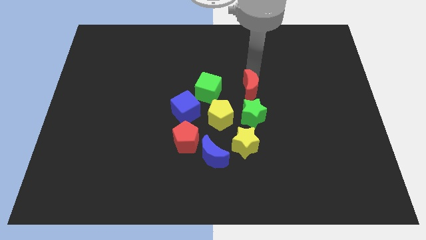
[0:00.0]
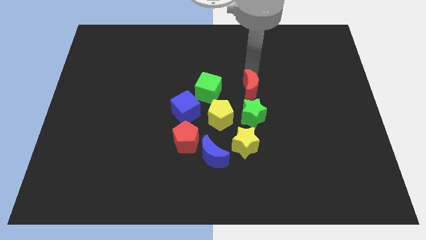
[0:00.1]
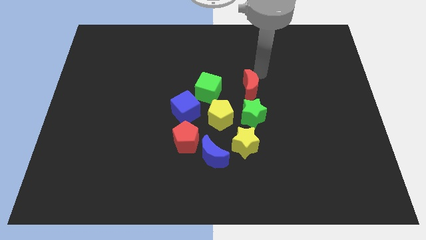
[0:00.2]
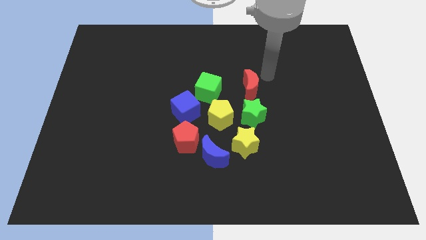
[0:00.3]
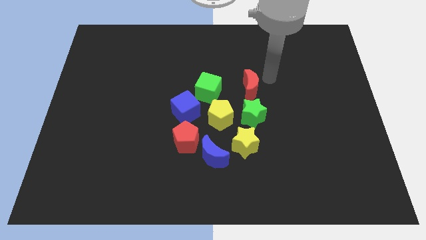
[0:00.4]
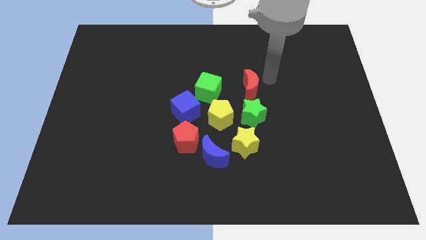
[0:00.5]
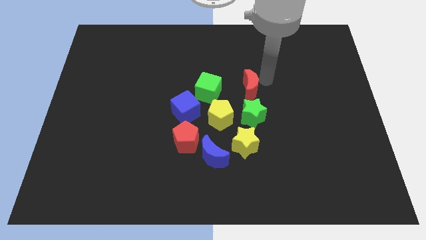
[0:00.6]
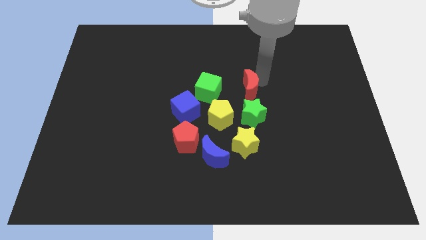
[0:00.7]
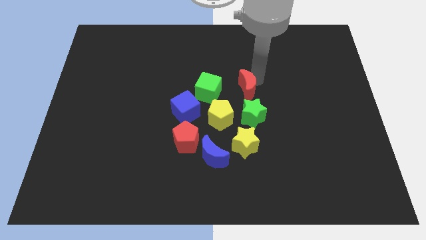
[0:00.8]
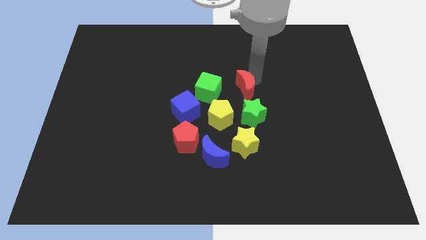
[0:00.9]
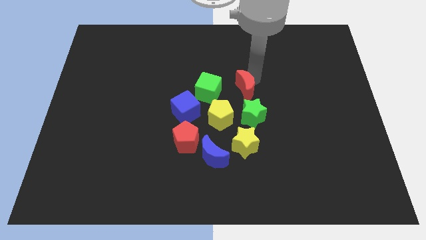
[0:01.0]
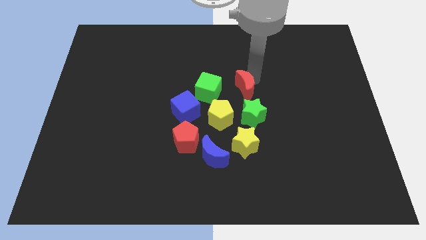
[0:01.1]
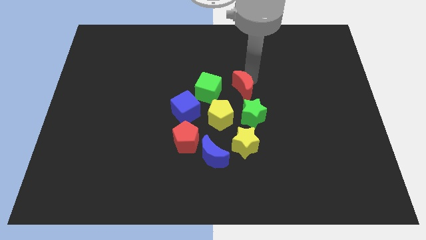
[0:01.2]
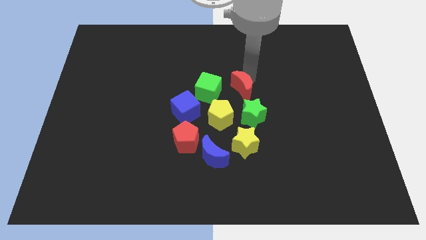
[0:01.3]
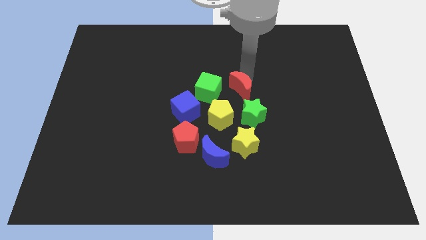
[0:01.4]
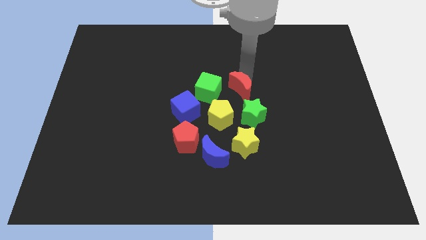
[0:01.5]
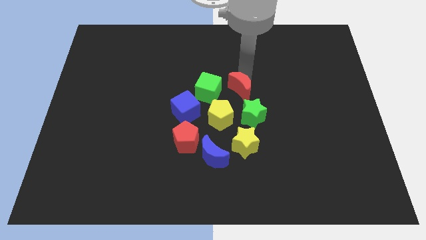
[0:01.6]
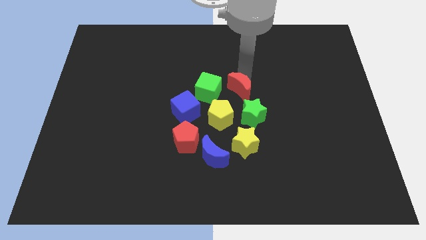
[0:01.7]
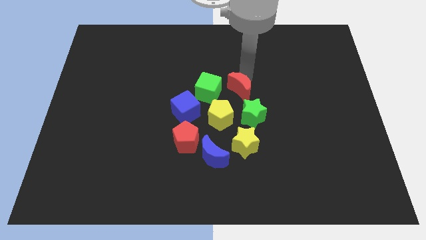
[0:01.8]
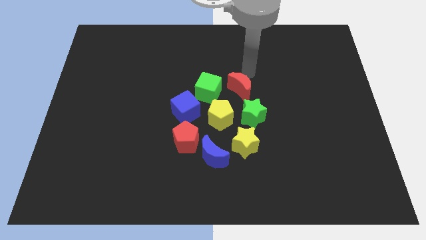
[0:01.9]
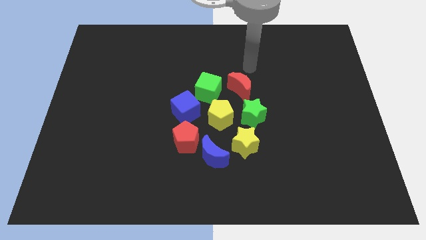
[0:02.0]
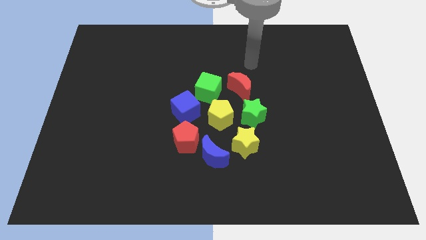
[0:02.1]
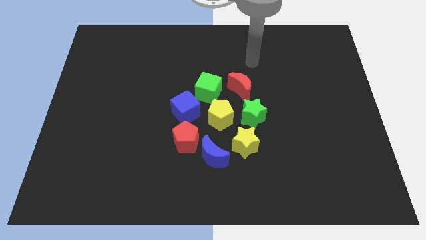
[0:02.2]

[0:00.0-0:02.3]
adjust the red moon in between the green blocks

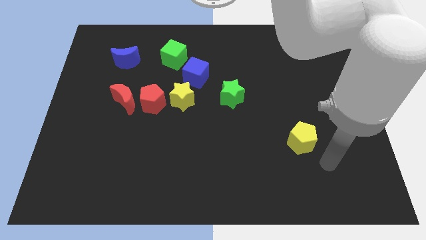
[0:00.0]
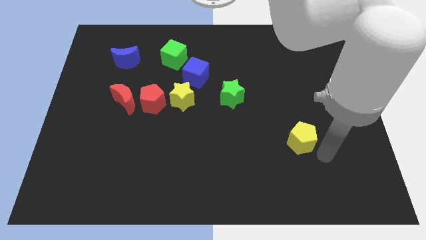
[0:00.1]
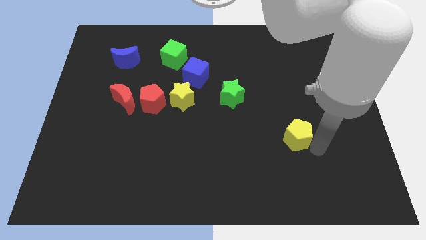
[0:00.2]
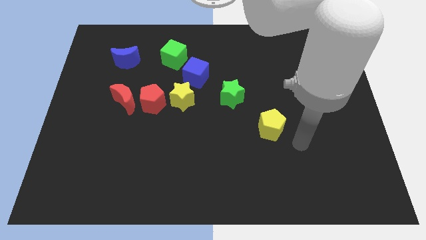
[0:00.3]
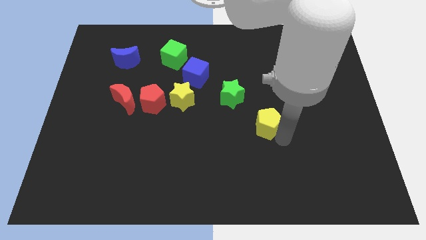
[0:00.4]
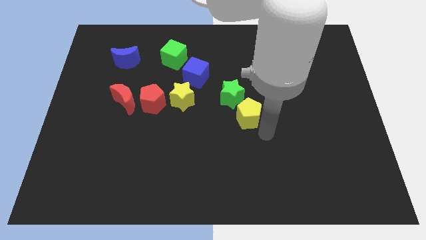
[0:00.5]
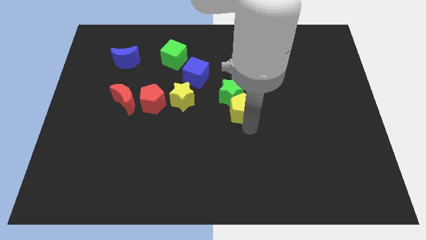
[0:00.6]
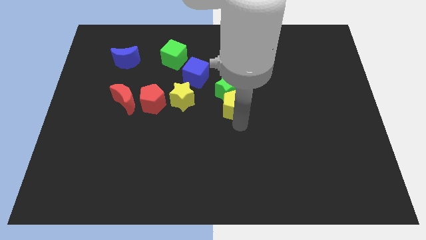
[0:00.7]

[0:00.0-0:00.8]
place yellow pentagon to the bottom of green star

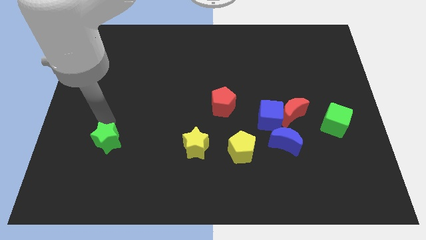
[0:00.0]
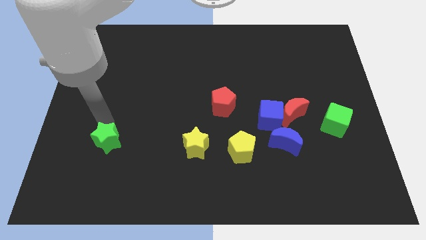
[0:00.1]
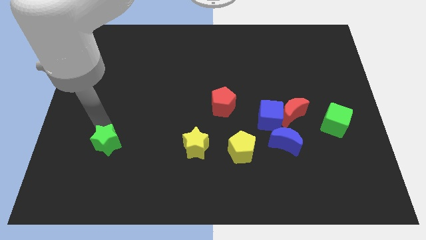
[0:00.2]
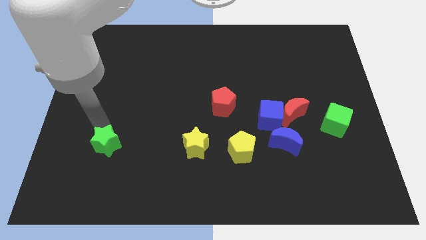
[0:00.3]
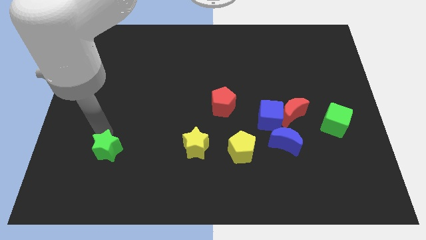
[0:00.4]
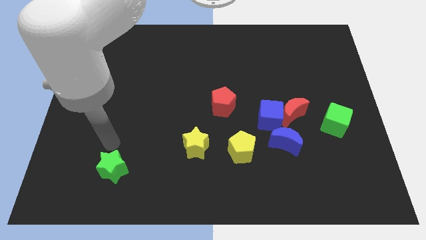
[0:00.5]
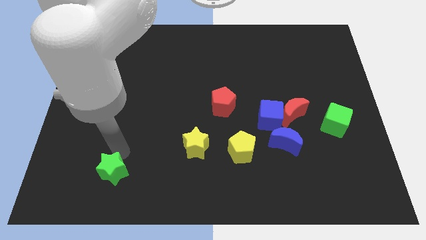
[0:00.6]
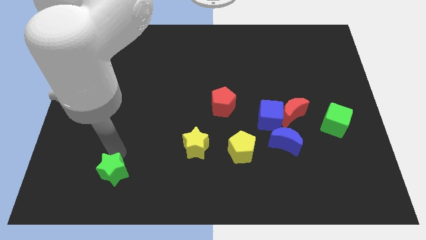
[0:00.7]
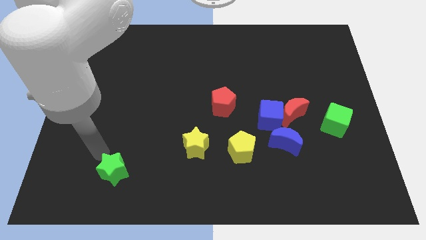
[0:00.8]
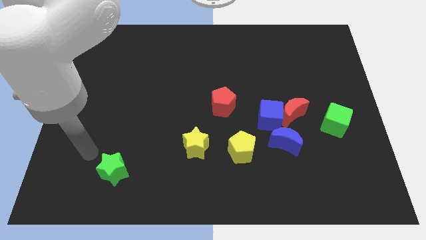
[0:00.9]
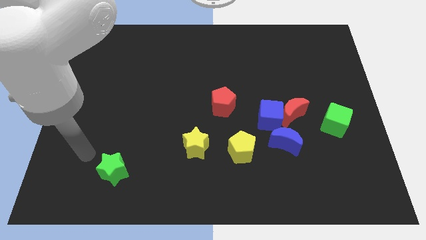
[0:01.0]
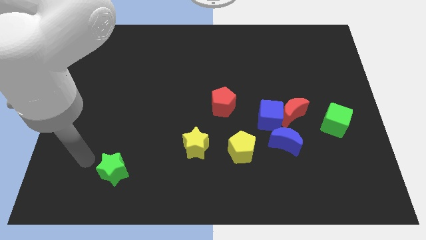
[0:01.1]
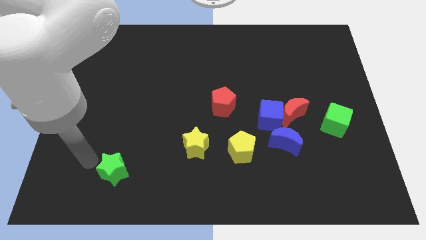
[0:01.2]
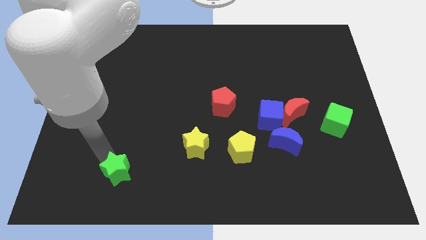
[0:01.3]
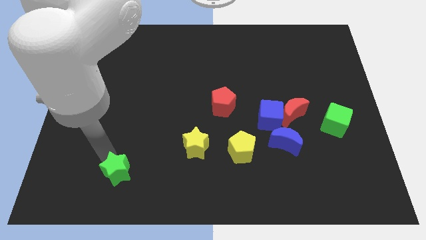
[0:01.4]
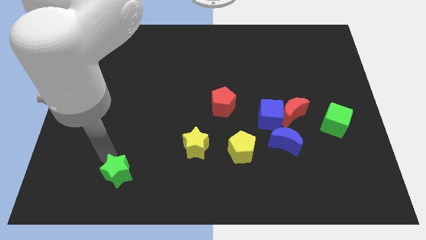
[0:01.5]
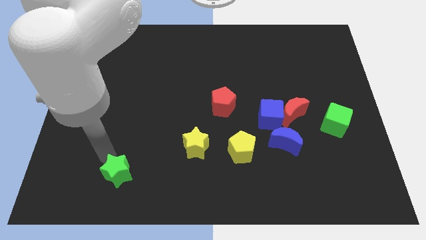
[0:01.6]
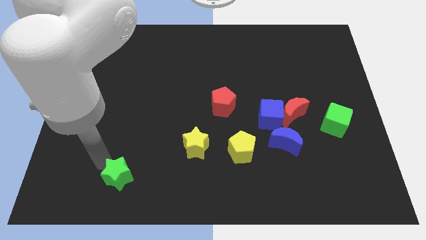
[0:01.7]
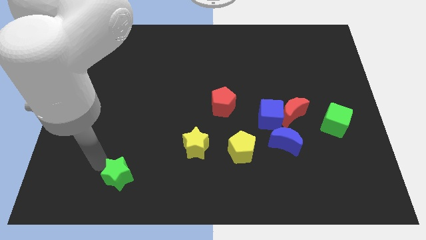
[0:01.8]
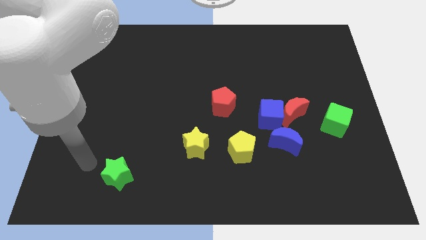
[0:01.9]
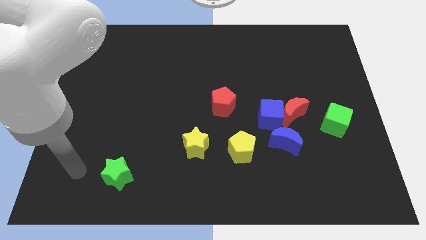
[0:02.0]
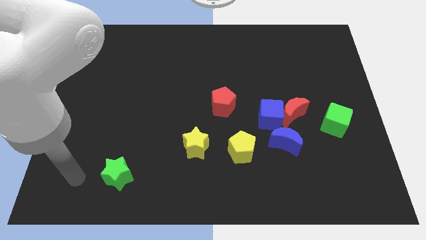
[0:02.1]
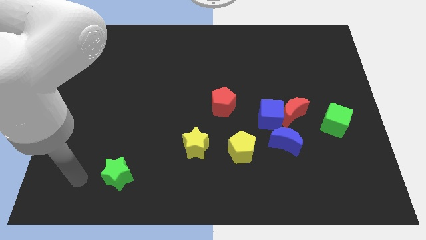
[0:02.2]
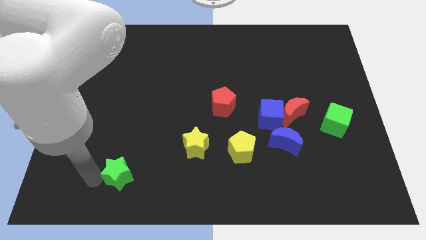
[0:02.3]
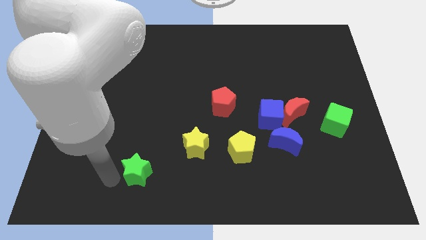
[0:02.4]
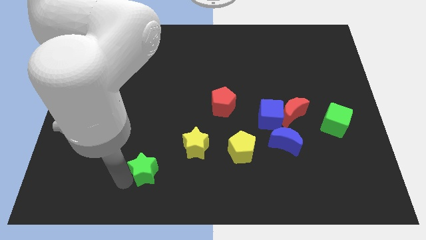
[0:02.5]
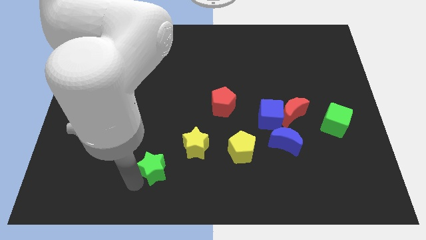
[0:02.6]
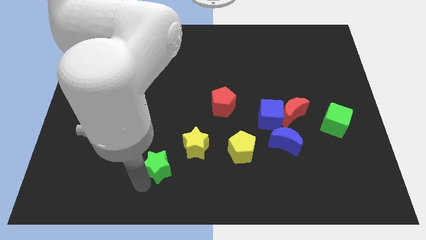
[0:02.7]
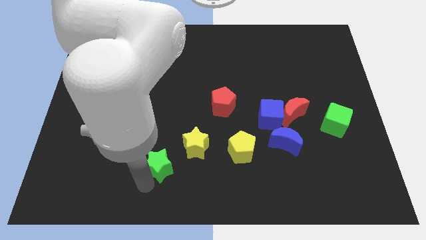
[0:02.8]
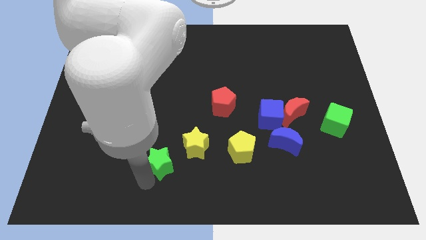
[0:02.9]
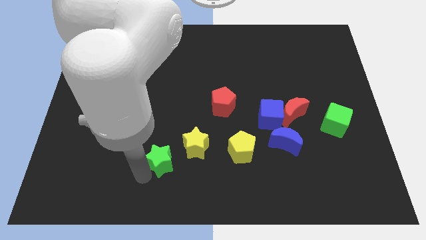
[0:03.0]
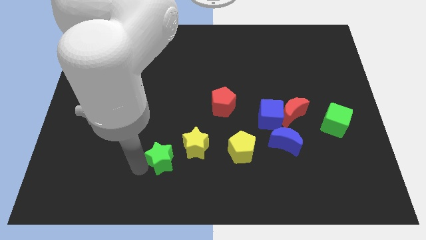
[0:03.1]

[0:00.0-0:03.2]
place the green star diagonally bottom left to the yellow star

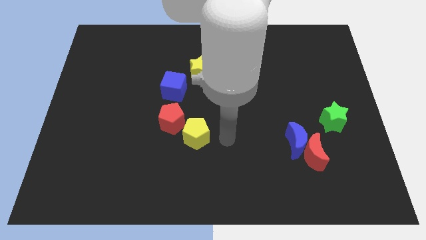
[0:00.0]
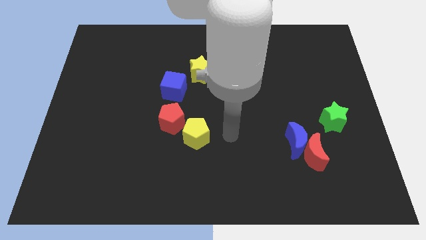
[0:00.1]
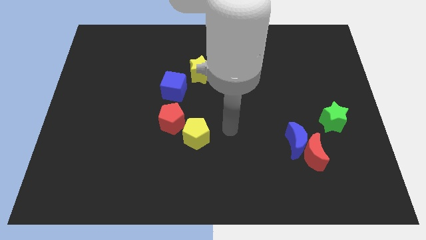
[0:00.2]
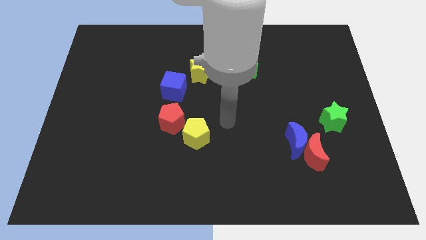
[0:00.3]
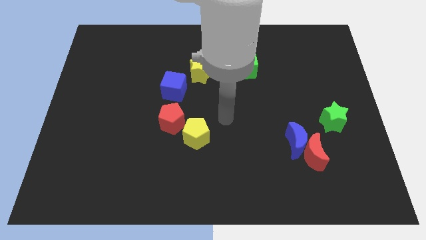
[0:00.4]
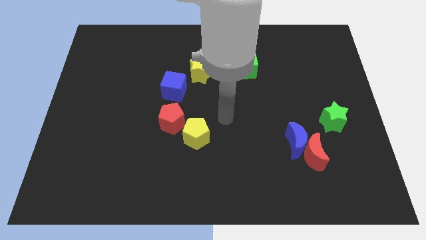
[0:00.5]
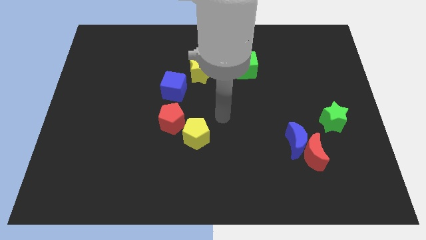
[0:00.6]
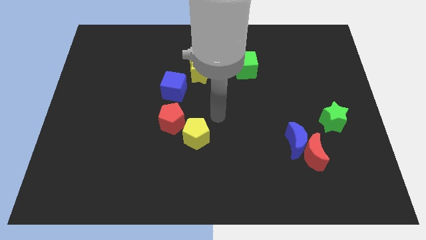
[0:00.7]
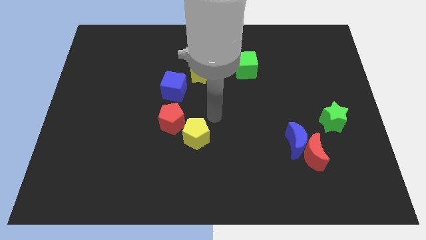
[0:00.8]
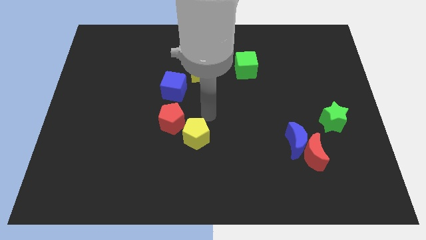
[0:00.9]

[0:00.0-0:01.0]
place your hand above the yellow pentagon

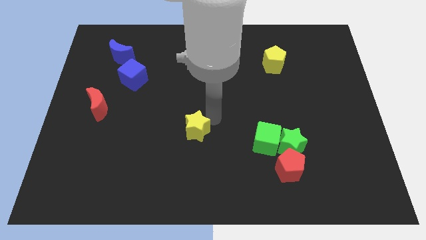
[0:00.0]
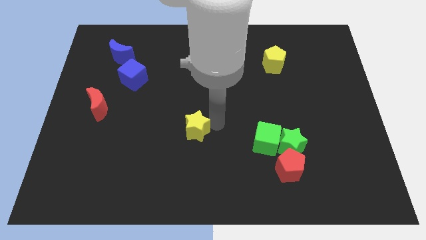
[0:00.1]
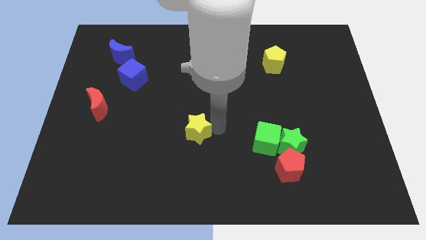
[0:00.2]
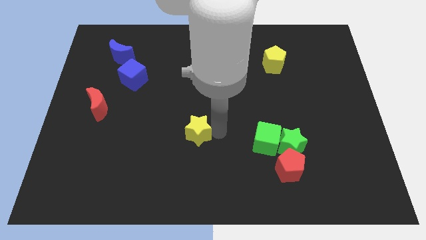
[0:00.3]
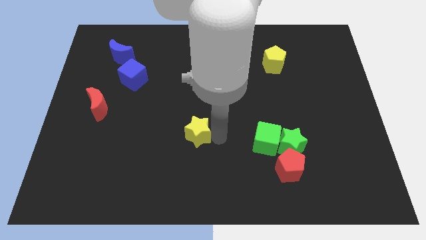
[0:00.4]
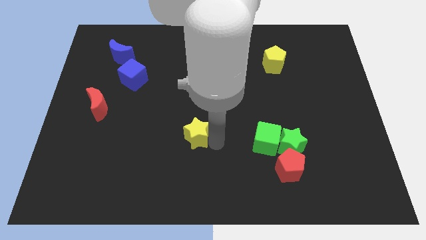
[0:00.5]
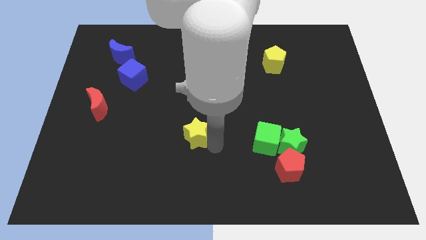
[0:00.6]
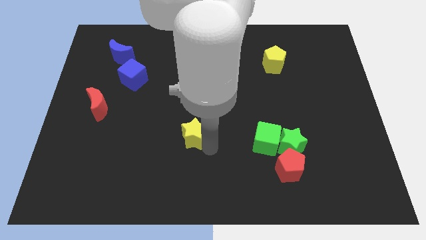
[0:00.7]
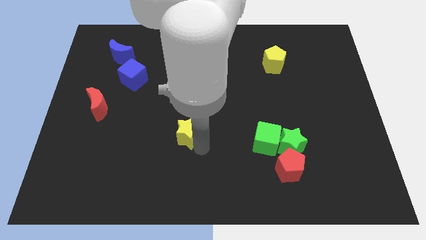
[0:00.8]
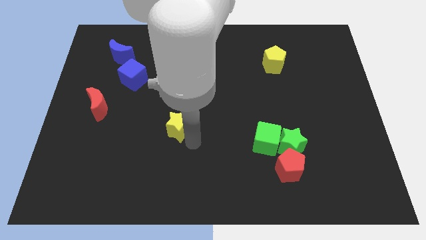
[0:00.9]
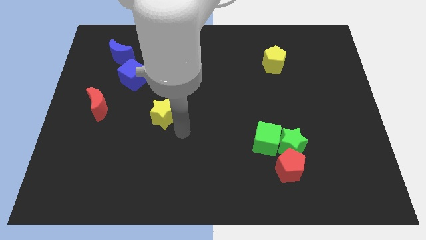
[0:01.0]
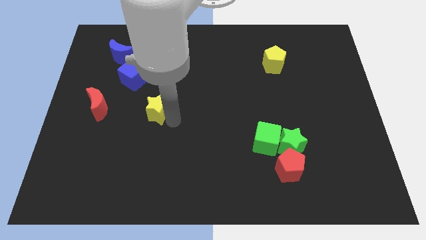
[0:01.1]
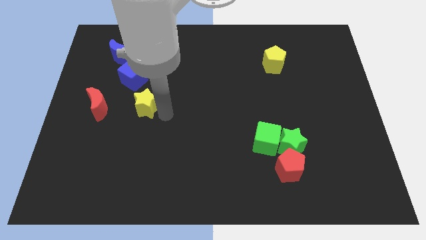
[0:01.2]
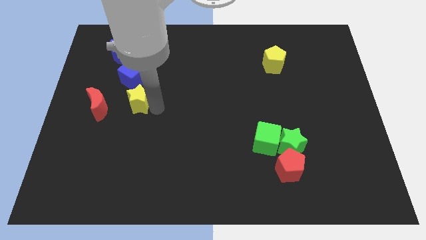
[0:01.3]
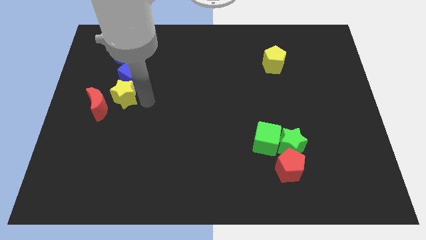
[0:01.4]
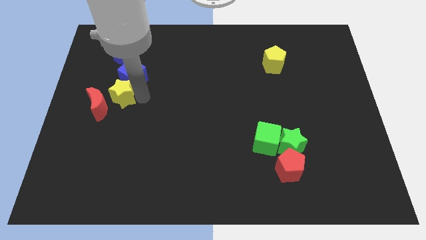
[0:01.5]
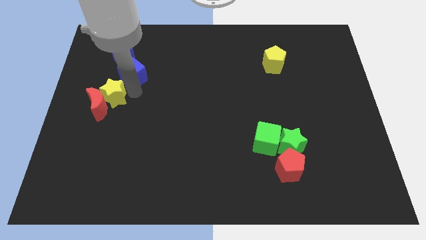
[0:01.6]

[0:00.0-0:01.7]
move yellow star into the red moon

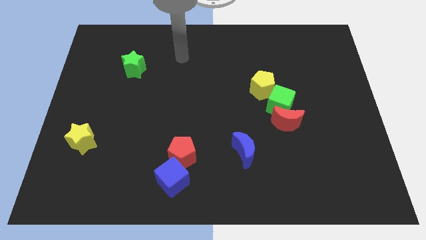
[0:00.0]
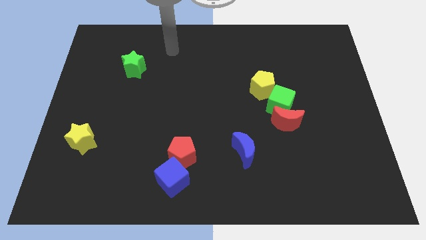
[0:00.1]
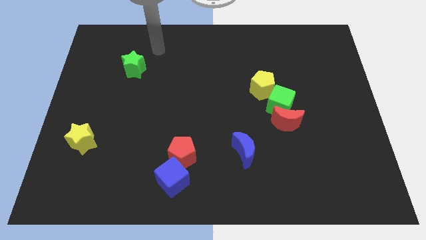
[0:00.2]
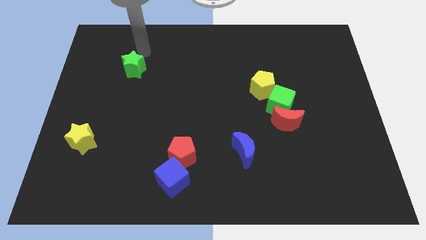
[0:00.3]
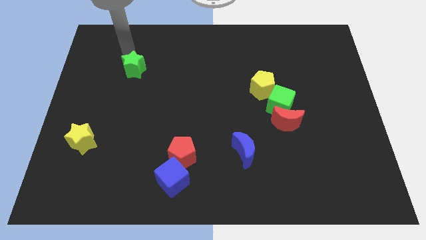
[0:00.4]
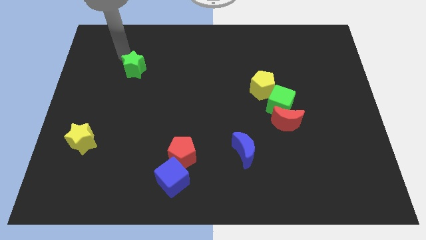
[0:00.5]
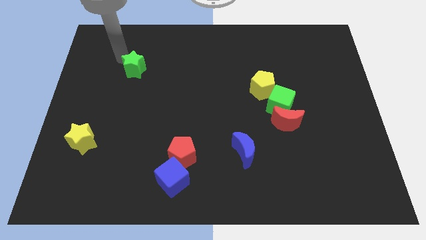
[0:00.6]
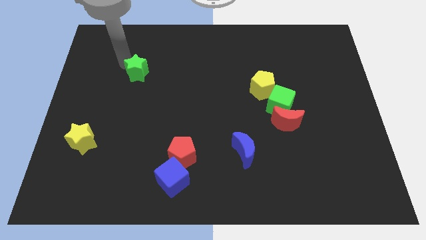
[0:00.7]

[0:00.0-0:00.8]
touch green star on its top
